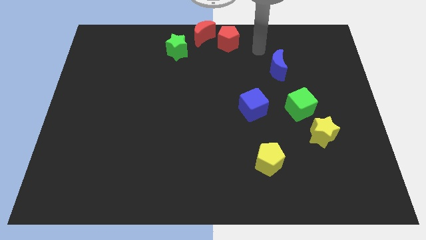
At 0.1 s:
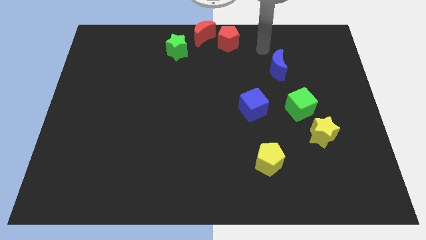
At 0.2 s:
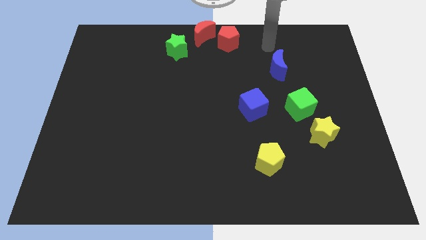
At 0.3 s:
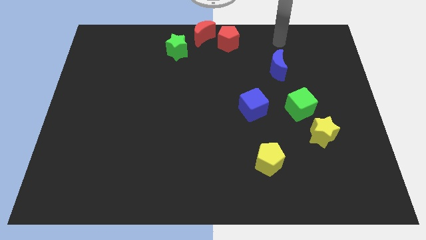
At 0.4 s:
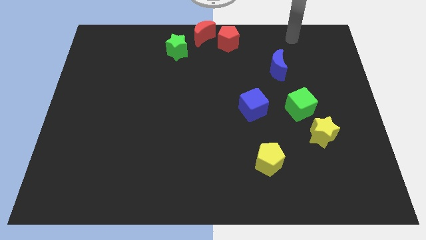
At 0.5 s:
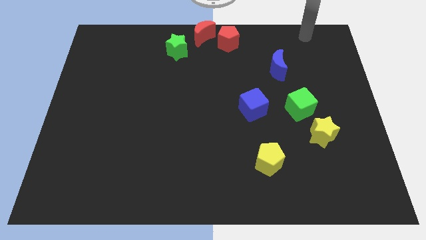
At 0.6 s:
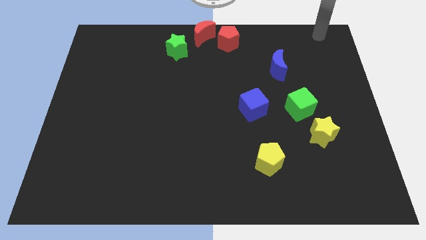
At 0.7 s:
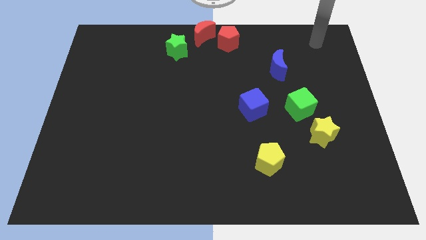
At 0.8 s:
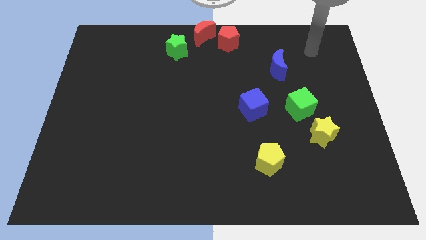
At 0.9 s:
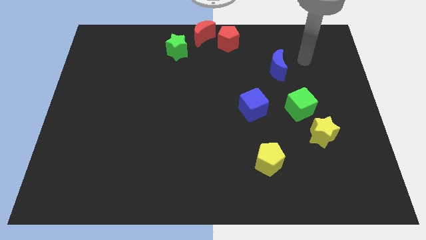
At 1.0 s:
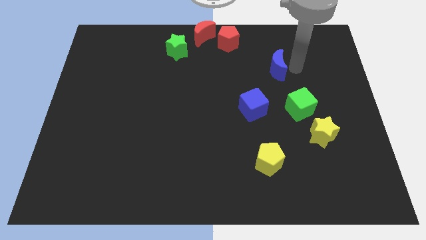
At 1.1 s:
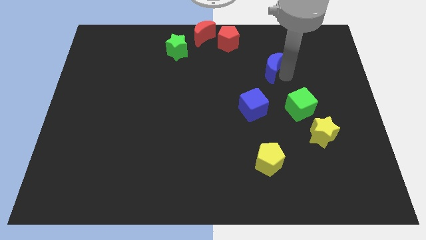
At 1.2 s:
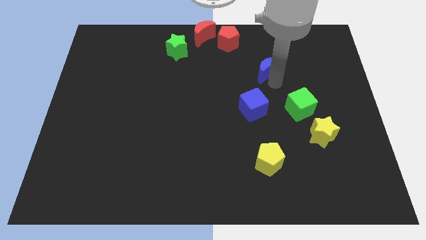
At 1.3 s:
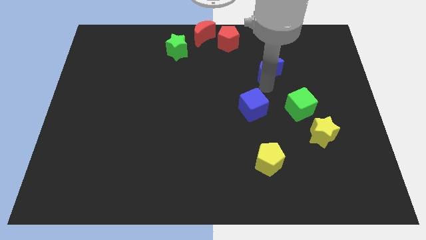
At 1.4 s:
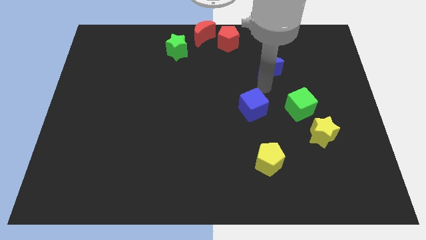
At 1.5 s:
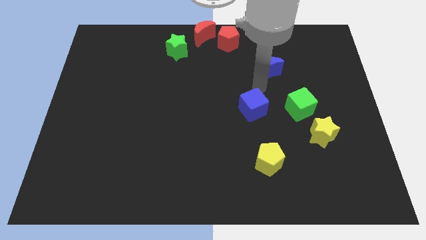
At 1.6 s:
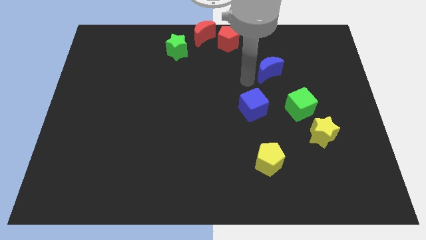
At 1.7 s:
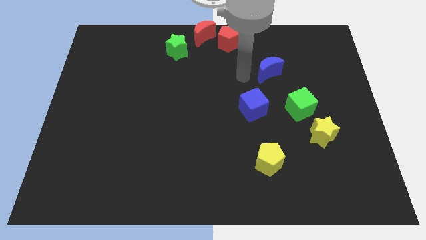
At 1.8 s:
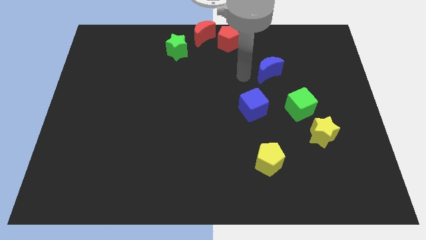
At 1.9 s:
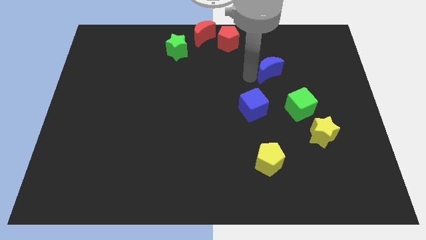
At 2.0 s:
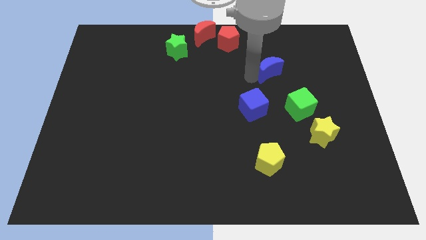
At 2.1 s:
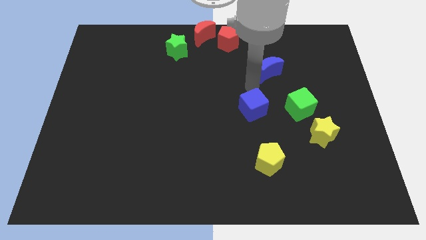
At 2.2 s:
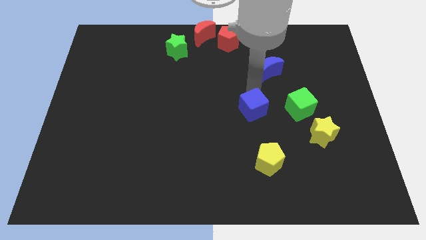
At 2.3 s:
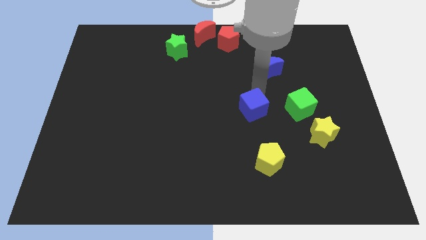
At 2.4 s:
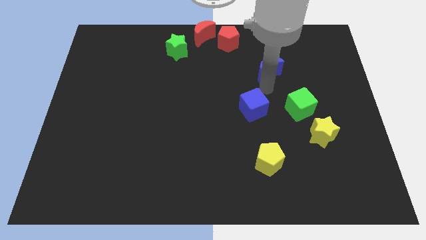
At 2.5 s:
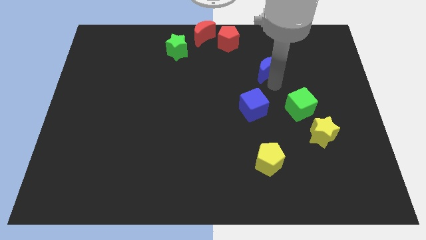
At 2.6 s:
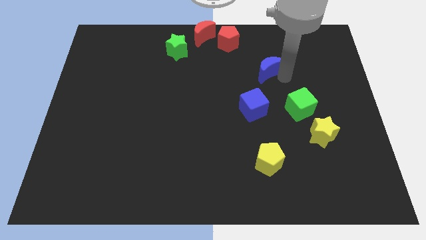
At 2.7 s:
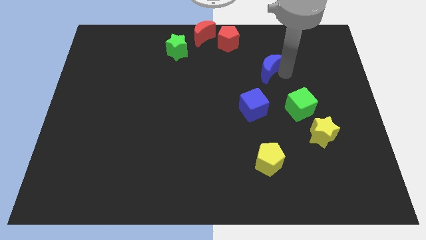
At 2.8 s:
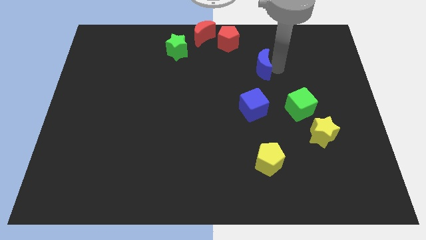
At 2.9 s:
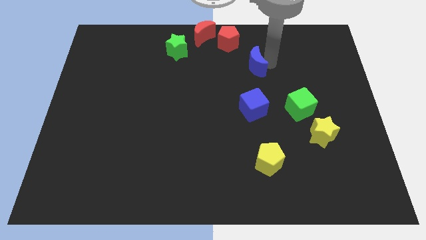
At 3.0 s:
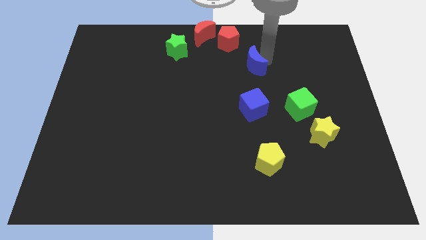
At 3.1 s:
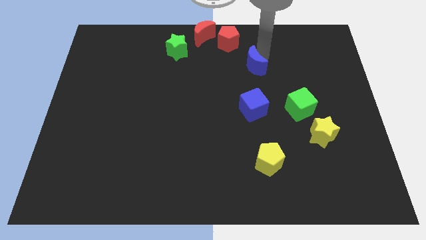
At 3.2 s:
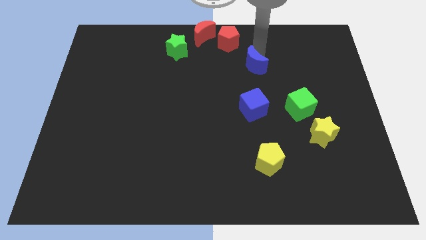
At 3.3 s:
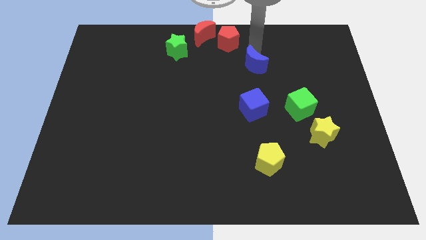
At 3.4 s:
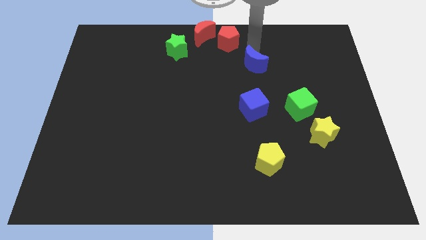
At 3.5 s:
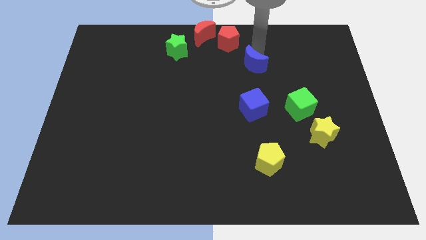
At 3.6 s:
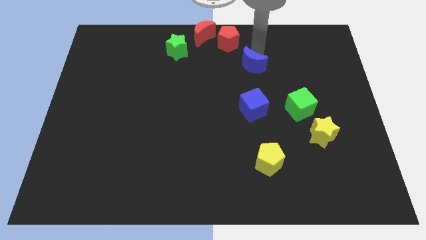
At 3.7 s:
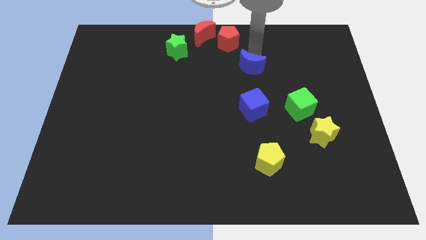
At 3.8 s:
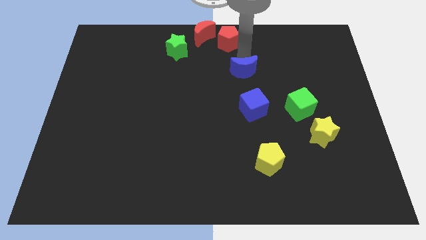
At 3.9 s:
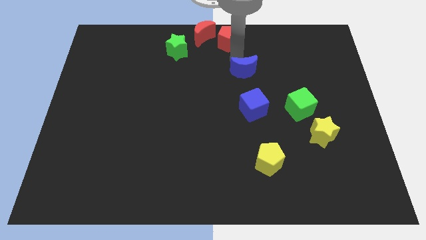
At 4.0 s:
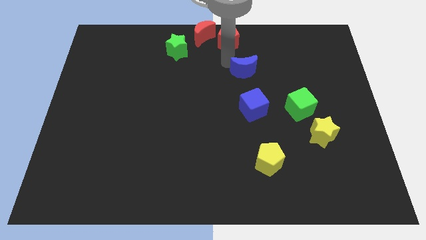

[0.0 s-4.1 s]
place the blue crescent above the blue cube

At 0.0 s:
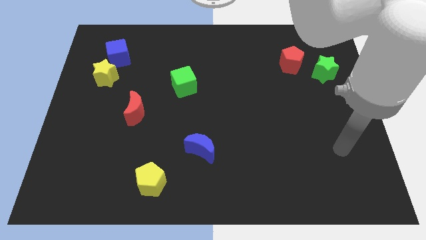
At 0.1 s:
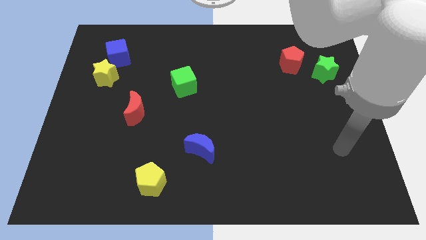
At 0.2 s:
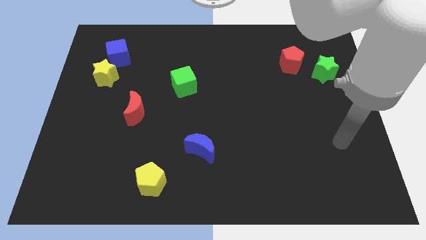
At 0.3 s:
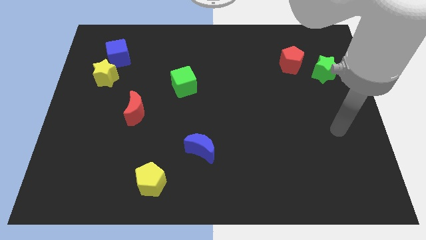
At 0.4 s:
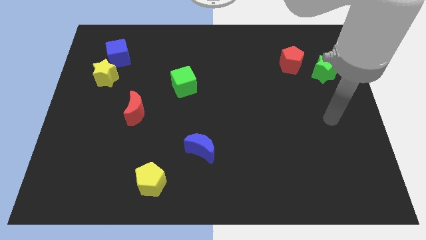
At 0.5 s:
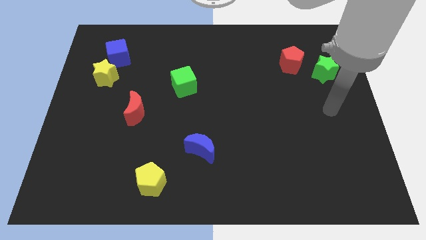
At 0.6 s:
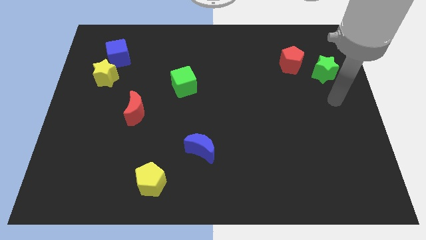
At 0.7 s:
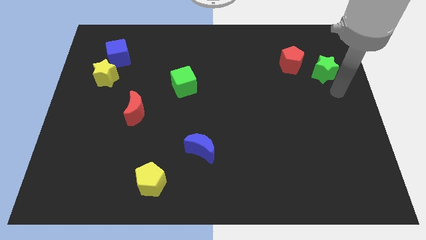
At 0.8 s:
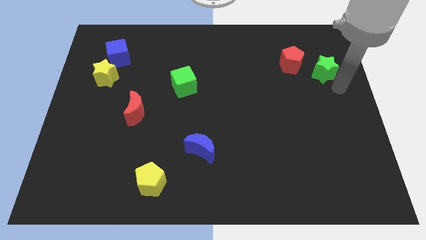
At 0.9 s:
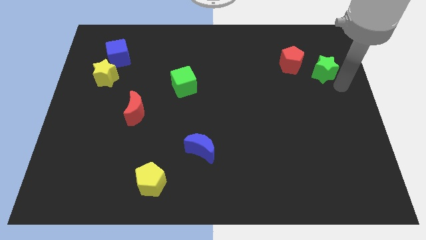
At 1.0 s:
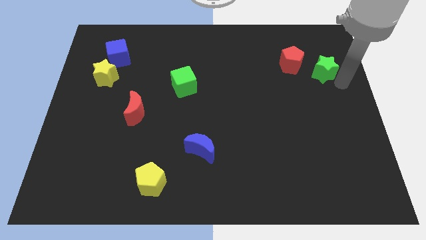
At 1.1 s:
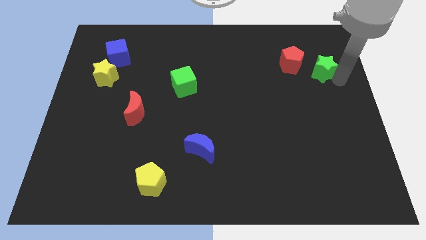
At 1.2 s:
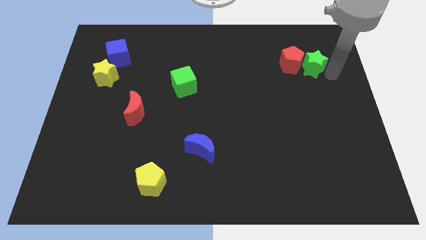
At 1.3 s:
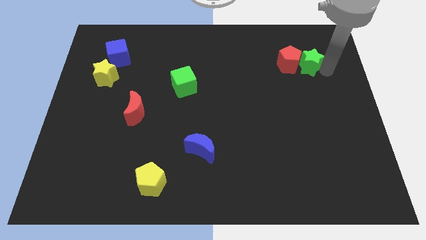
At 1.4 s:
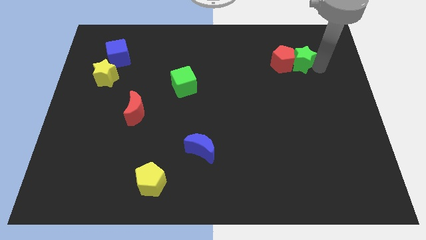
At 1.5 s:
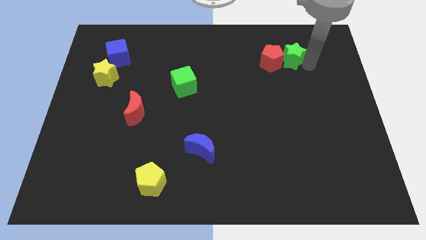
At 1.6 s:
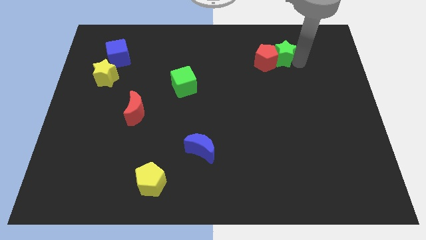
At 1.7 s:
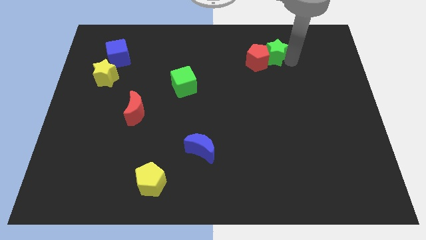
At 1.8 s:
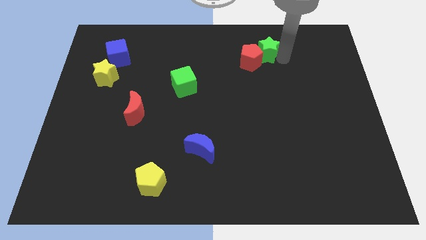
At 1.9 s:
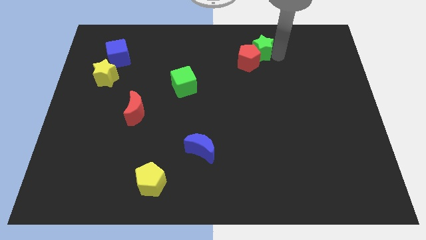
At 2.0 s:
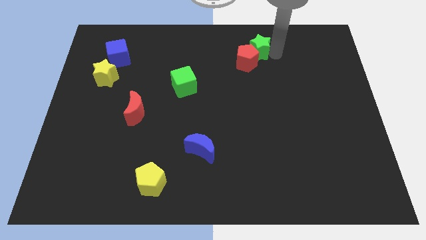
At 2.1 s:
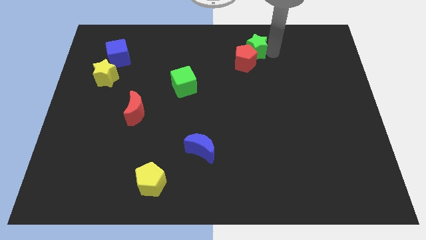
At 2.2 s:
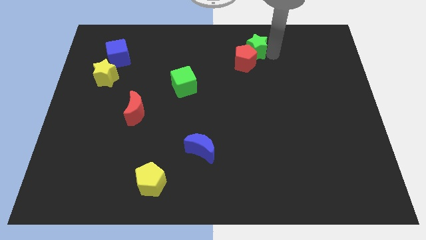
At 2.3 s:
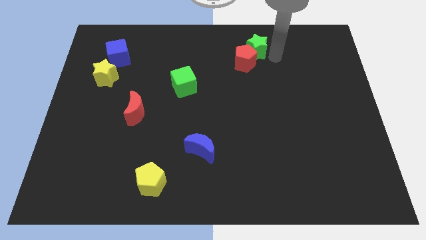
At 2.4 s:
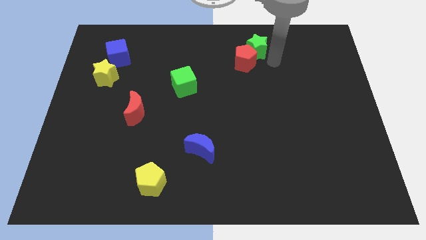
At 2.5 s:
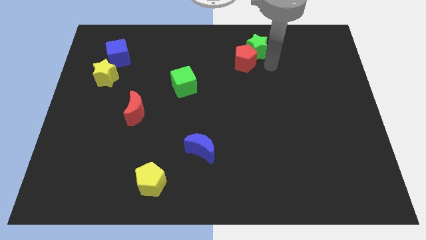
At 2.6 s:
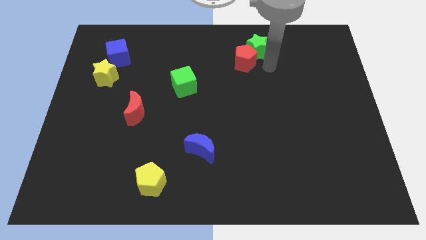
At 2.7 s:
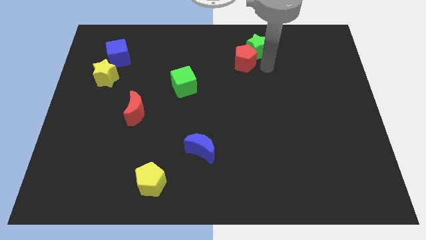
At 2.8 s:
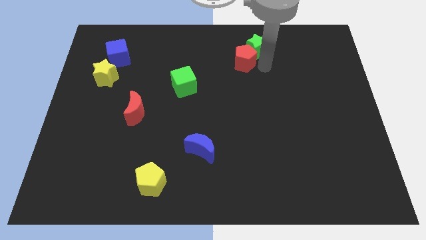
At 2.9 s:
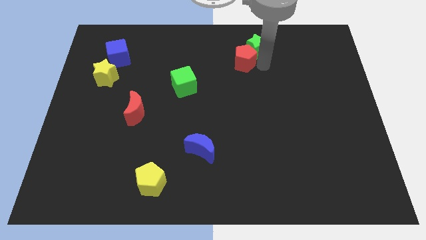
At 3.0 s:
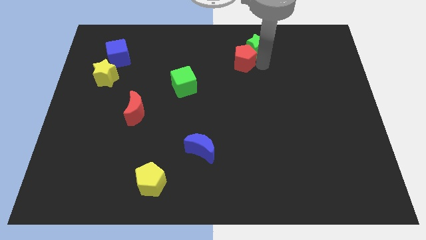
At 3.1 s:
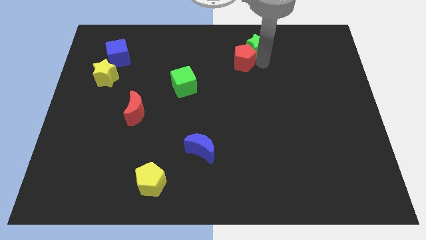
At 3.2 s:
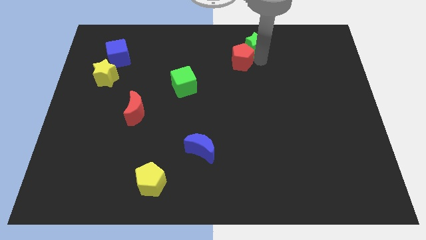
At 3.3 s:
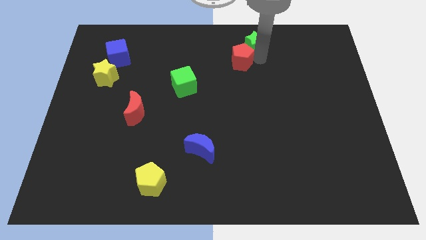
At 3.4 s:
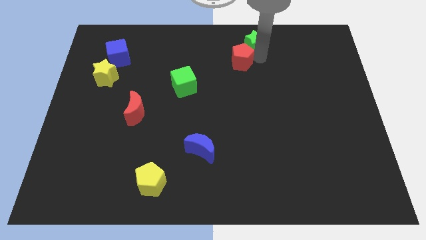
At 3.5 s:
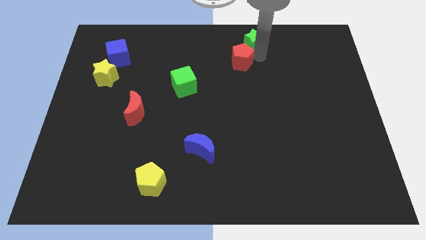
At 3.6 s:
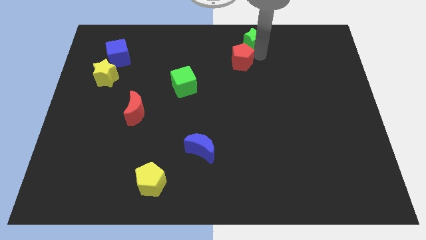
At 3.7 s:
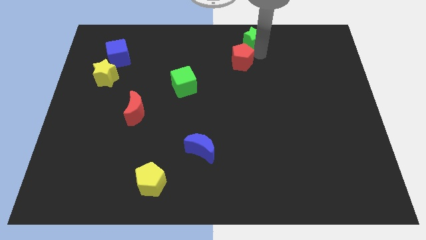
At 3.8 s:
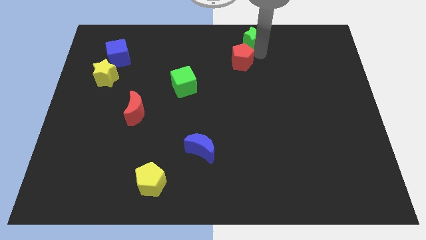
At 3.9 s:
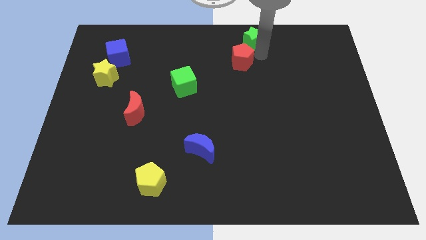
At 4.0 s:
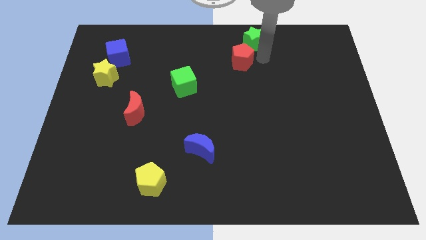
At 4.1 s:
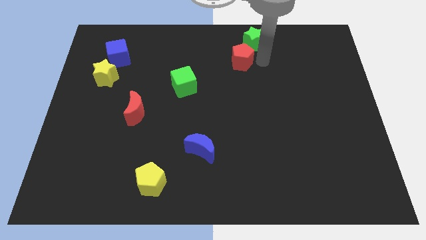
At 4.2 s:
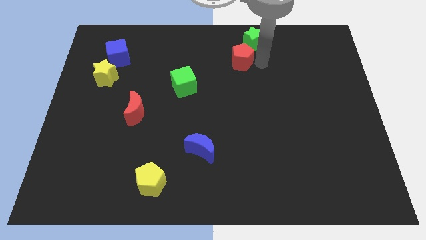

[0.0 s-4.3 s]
push the green star towards the top center

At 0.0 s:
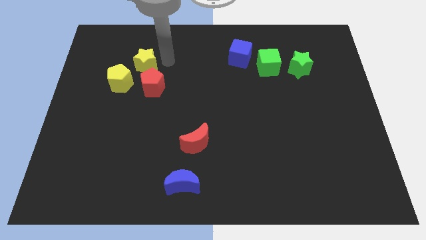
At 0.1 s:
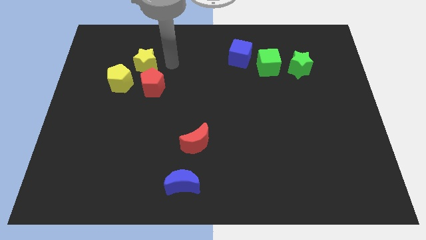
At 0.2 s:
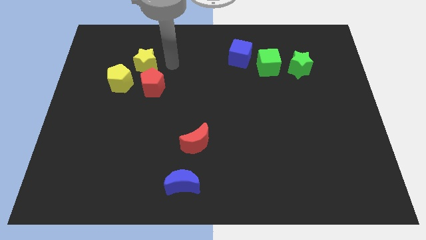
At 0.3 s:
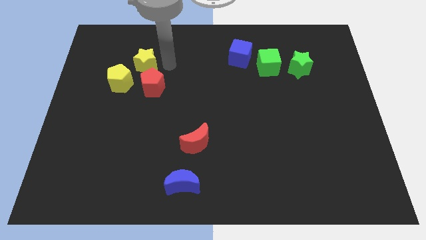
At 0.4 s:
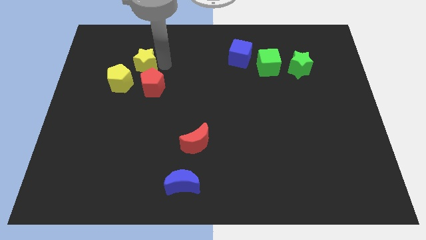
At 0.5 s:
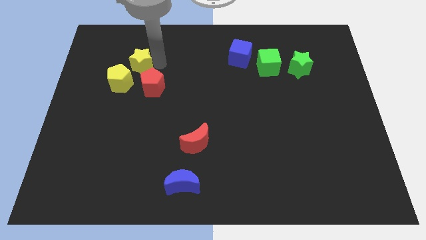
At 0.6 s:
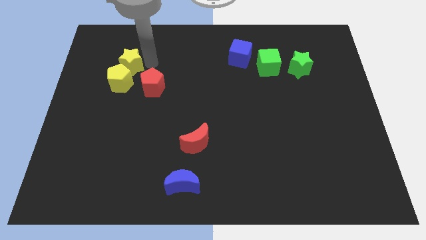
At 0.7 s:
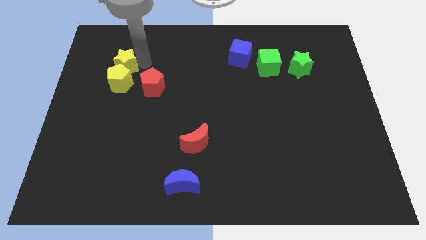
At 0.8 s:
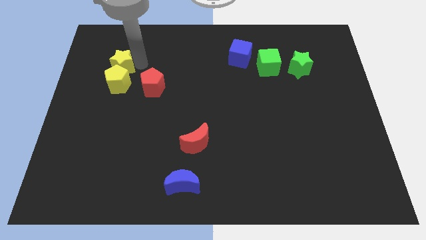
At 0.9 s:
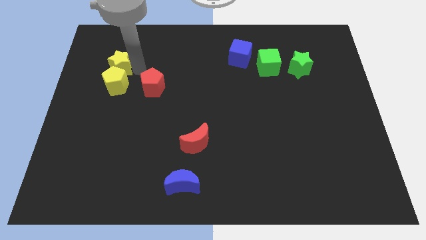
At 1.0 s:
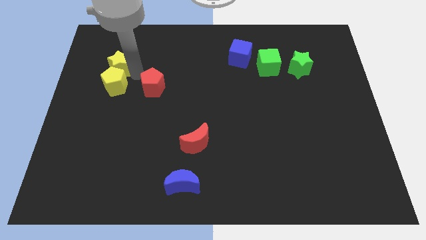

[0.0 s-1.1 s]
push the yellow star into the top of the yellow pentagon
